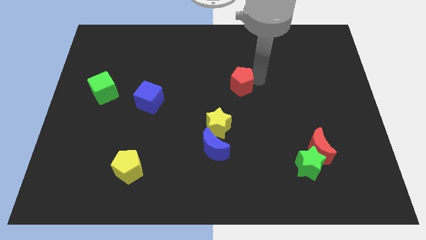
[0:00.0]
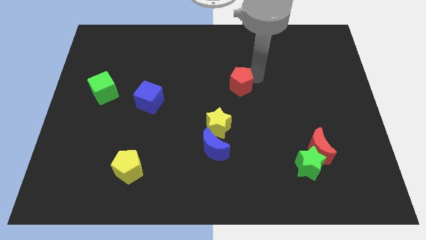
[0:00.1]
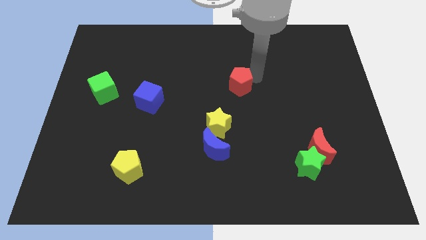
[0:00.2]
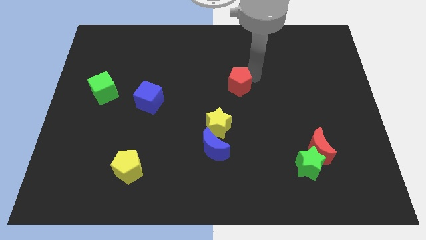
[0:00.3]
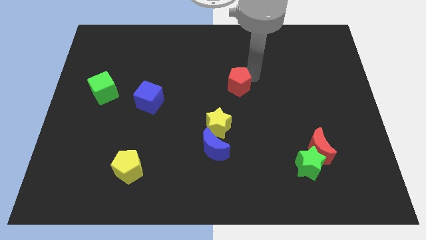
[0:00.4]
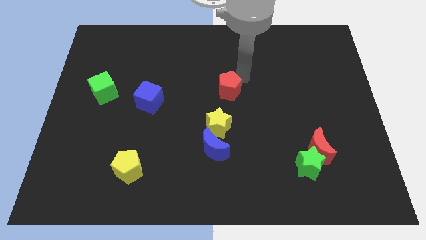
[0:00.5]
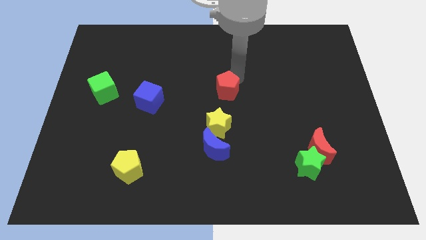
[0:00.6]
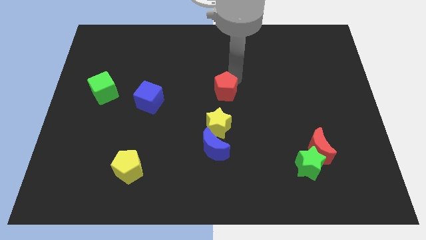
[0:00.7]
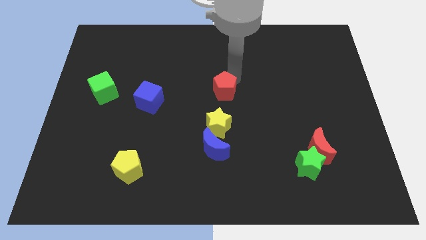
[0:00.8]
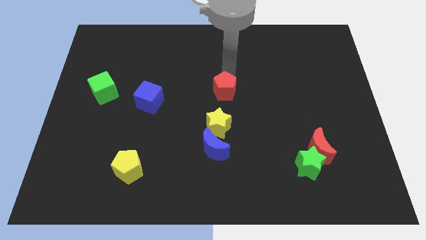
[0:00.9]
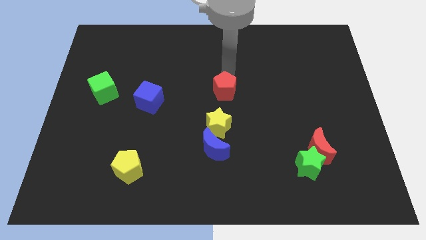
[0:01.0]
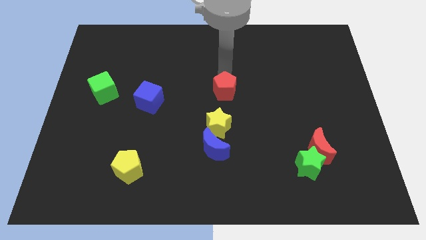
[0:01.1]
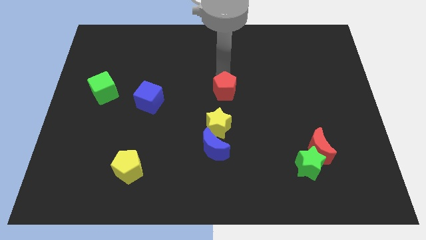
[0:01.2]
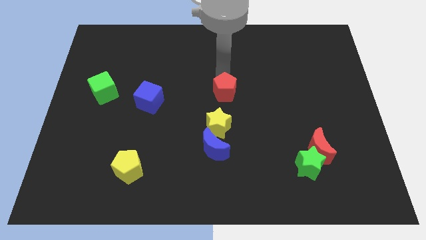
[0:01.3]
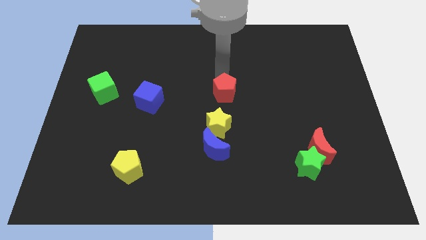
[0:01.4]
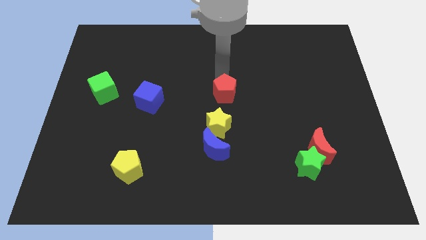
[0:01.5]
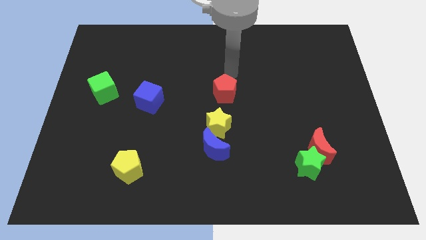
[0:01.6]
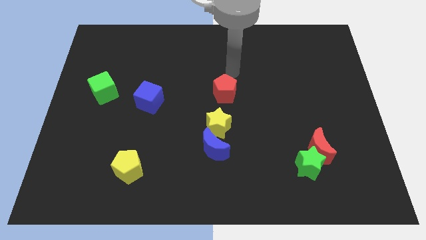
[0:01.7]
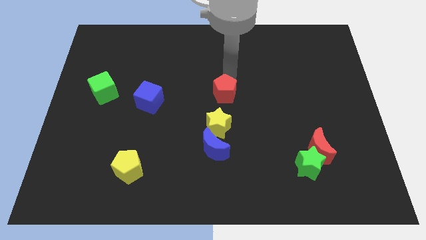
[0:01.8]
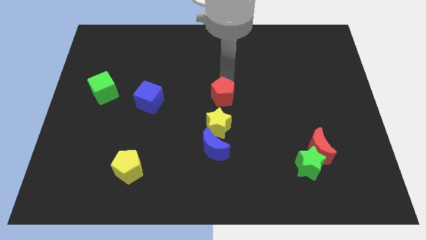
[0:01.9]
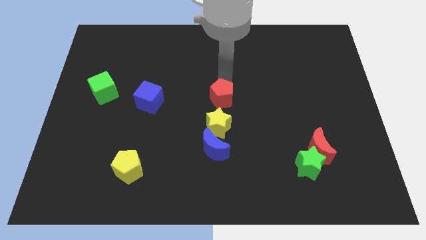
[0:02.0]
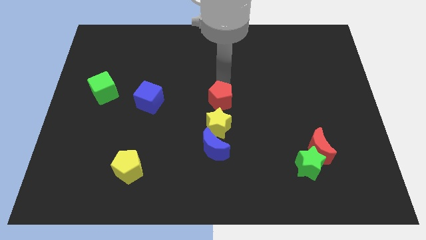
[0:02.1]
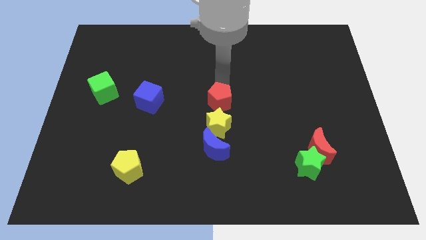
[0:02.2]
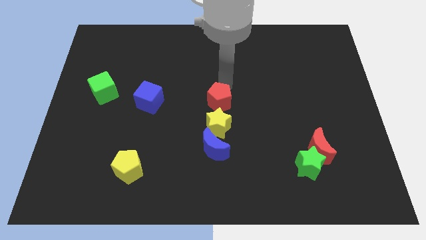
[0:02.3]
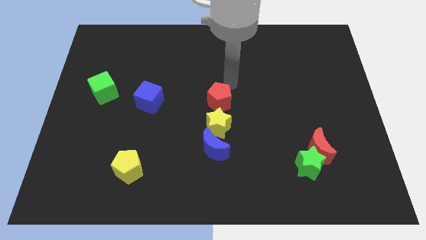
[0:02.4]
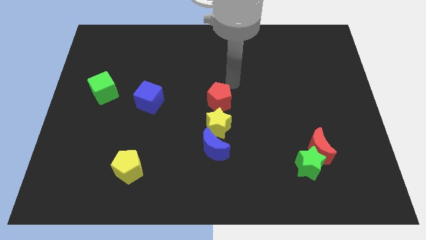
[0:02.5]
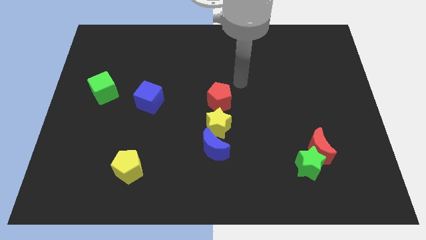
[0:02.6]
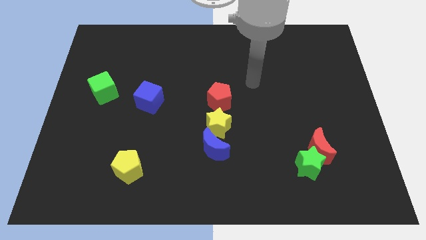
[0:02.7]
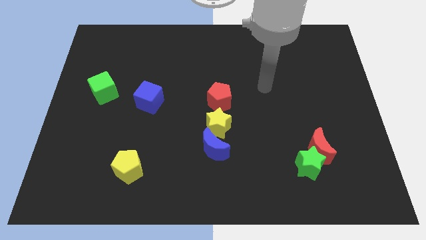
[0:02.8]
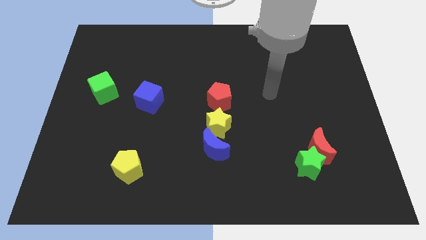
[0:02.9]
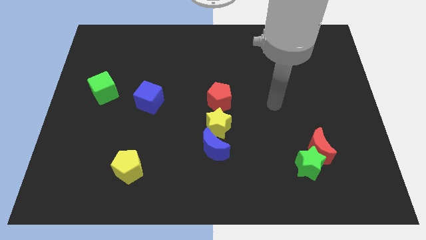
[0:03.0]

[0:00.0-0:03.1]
place the red pentagon at the top of the yellow star

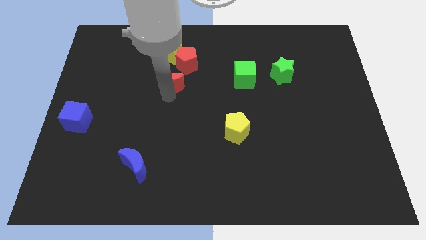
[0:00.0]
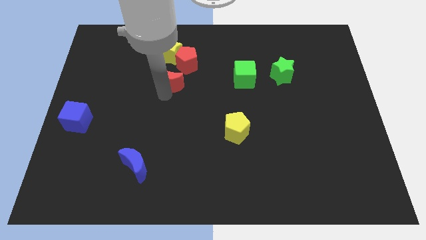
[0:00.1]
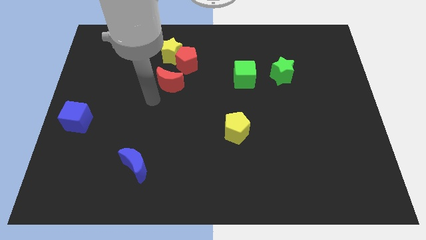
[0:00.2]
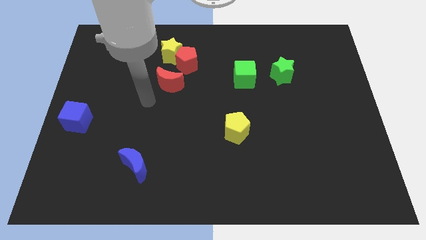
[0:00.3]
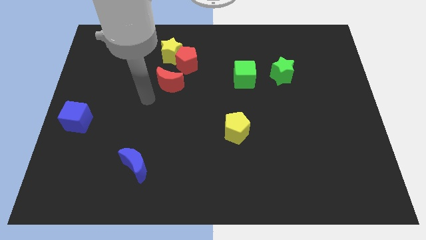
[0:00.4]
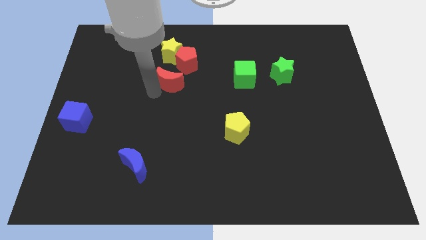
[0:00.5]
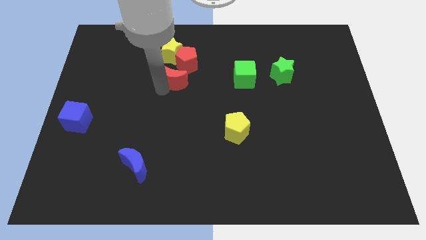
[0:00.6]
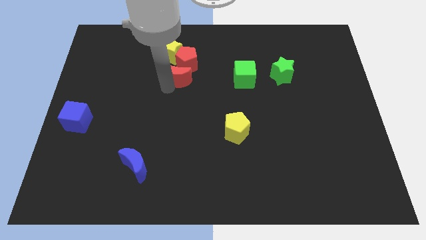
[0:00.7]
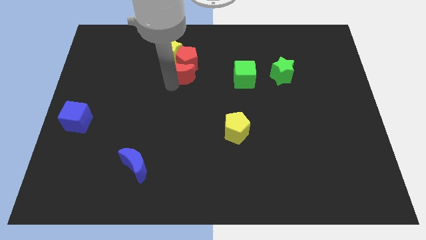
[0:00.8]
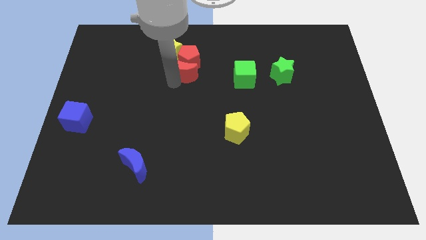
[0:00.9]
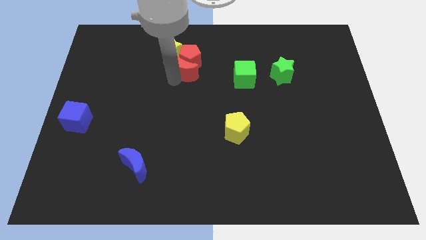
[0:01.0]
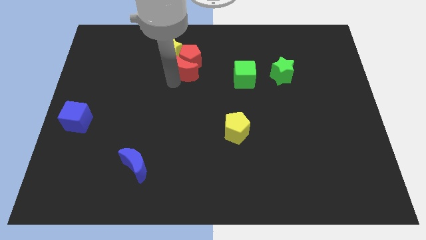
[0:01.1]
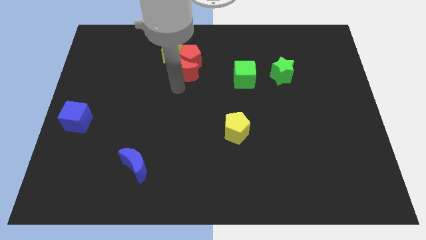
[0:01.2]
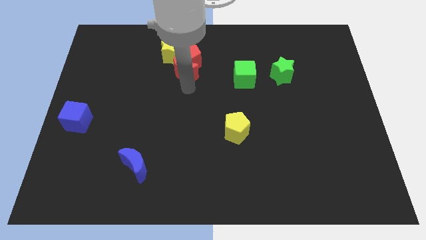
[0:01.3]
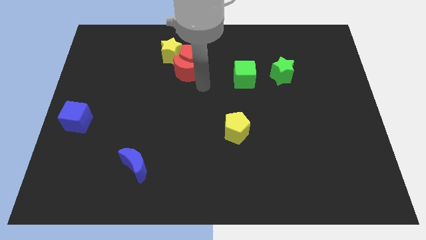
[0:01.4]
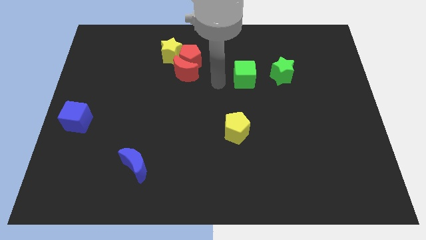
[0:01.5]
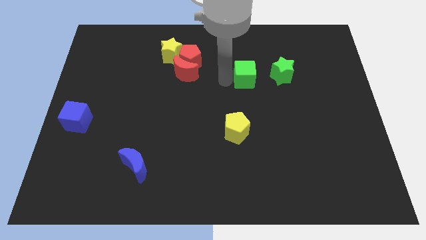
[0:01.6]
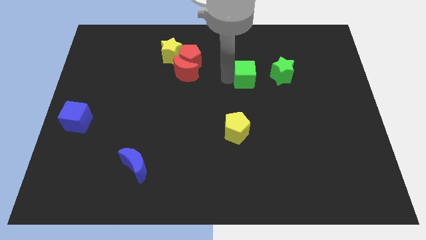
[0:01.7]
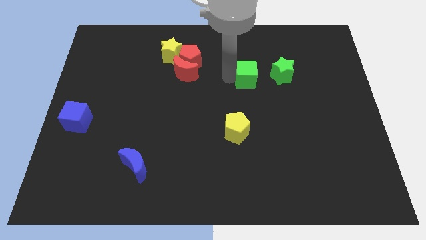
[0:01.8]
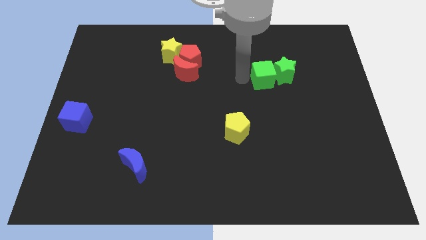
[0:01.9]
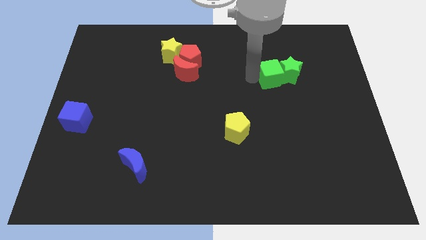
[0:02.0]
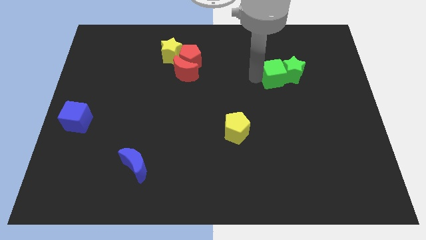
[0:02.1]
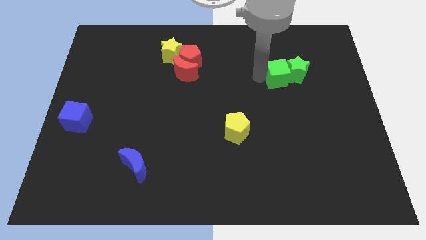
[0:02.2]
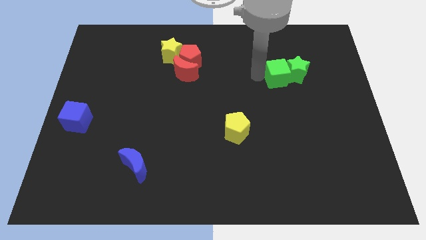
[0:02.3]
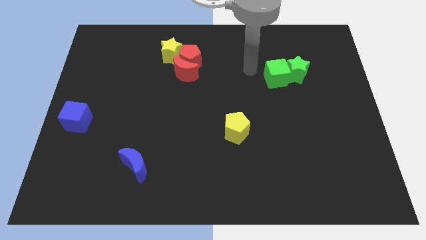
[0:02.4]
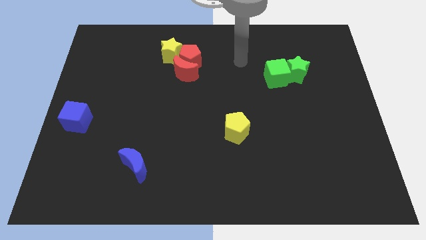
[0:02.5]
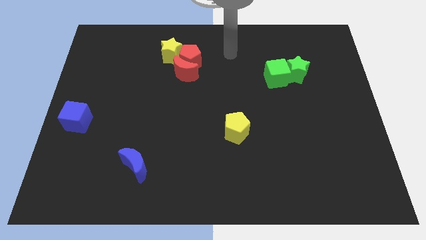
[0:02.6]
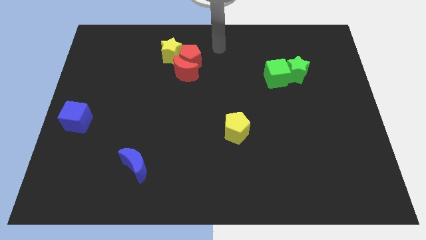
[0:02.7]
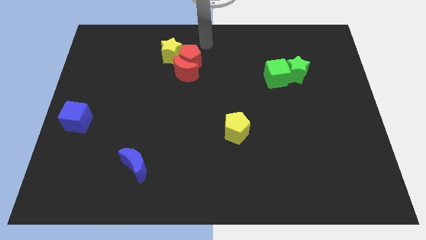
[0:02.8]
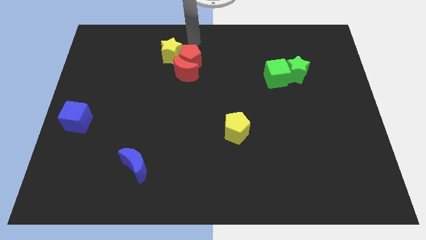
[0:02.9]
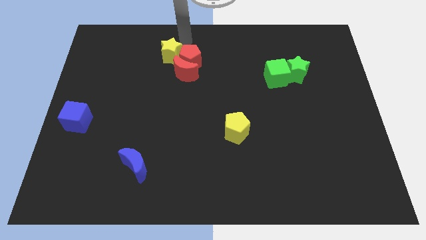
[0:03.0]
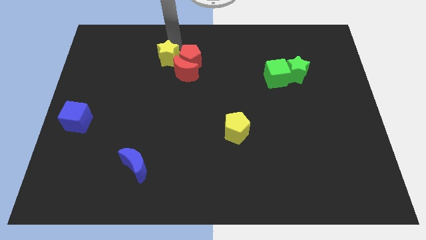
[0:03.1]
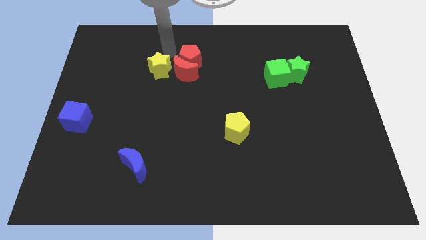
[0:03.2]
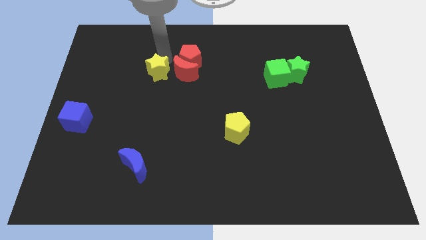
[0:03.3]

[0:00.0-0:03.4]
push the green cube into the green star

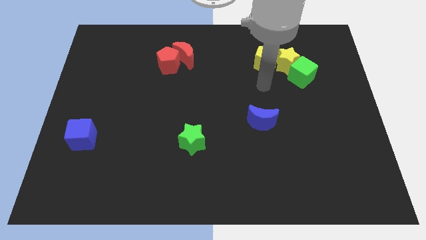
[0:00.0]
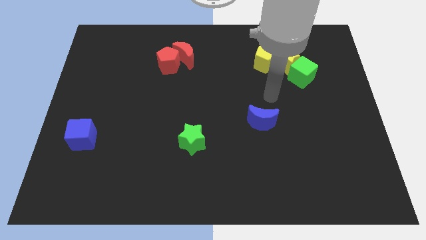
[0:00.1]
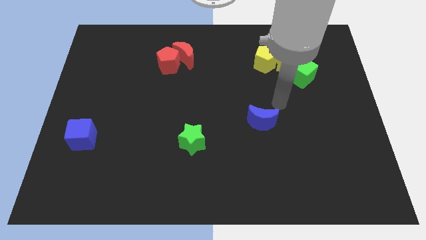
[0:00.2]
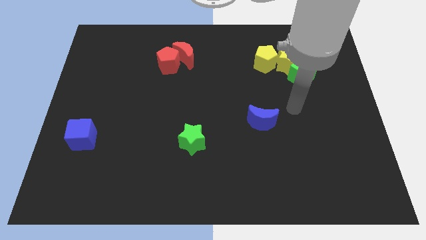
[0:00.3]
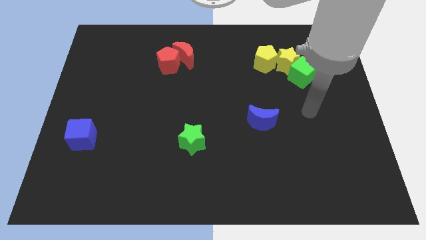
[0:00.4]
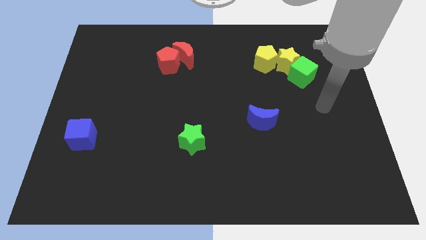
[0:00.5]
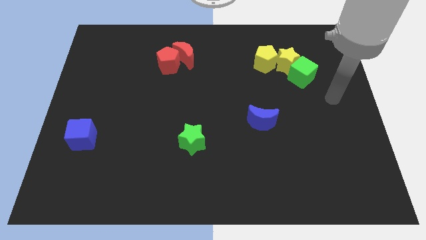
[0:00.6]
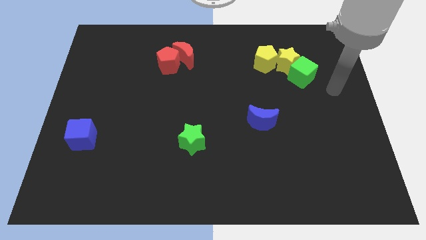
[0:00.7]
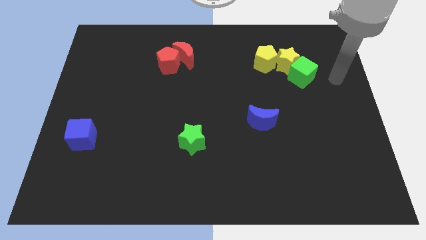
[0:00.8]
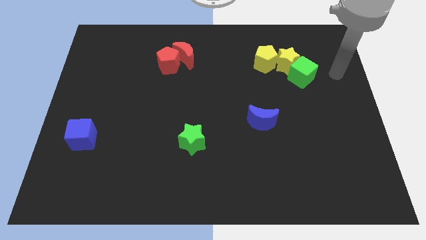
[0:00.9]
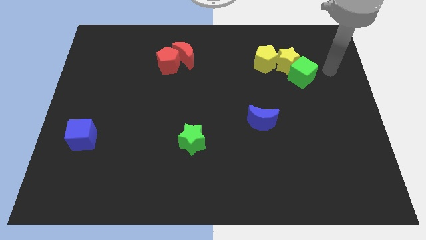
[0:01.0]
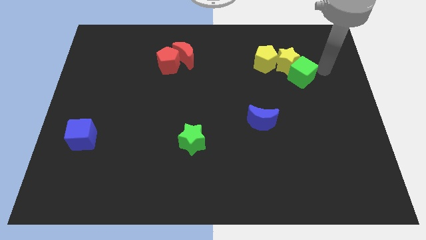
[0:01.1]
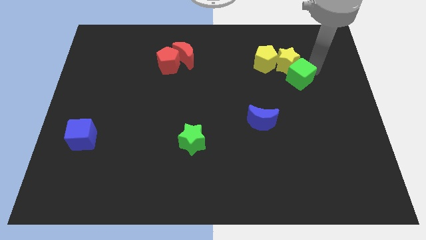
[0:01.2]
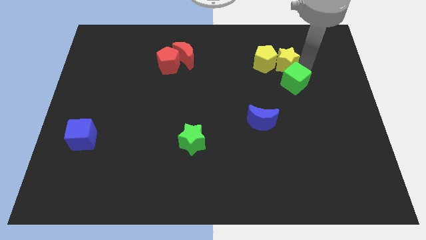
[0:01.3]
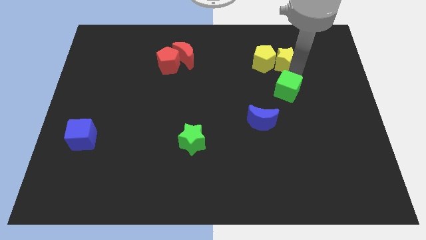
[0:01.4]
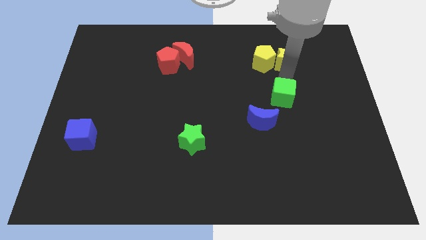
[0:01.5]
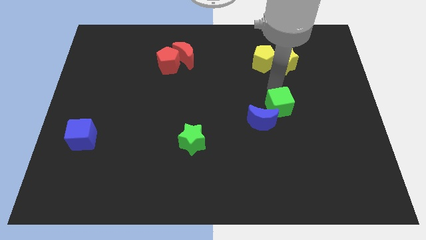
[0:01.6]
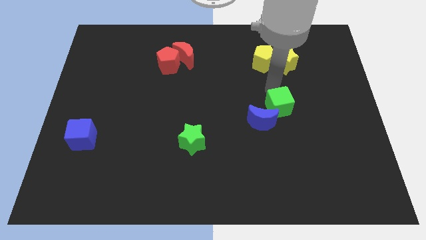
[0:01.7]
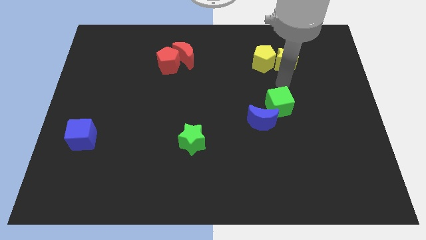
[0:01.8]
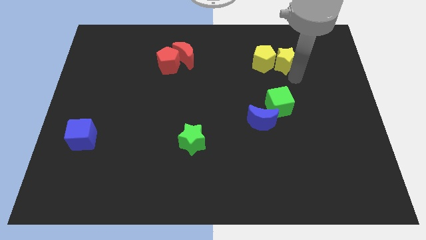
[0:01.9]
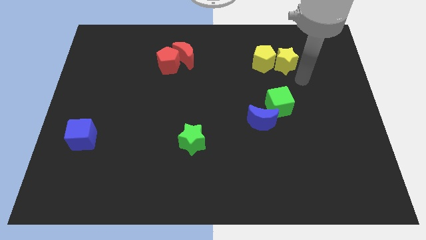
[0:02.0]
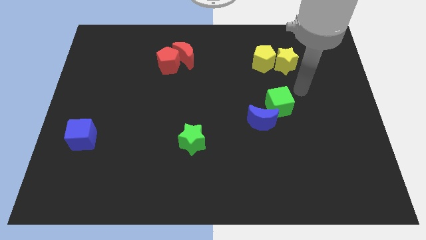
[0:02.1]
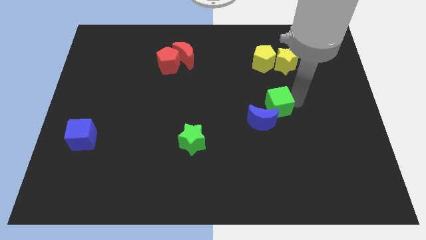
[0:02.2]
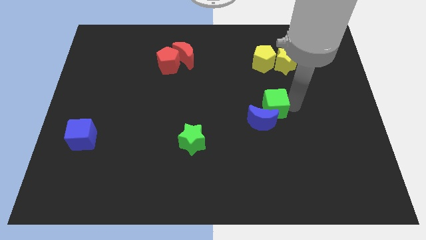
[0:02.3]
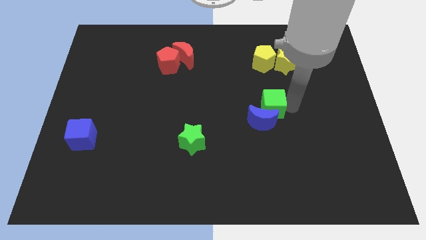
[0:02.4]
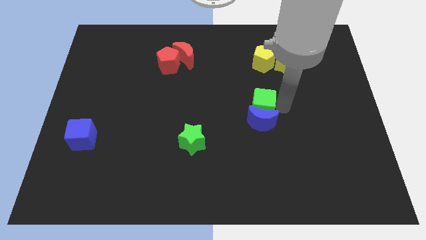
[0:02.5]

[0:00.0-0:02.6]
place the green cube above the blue crescent
